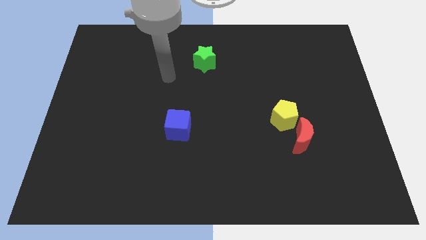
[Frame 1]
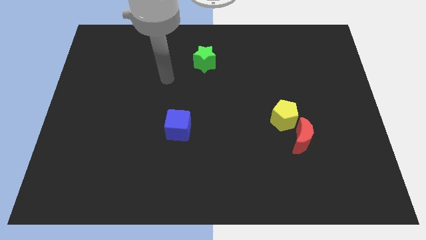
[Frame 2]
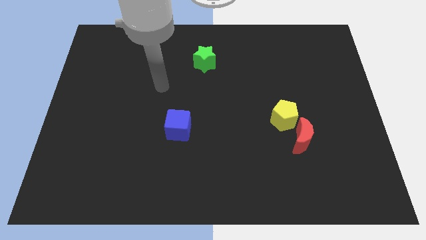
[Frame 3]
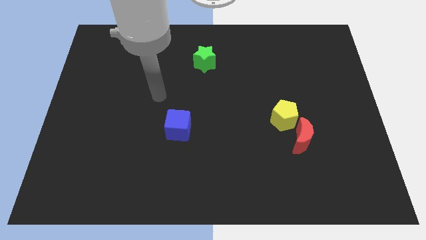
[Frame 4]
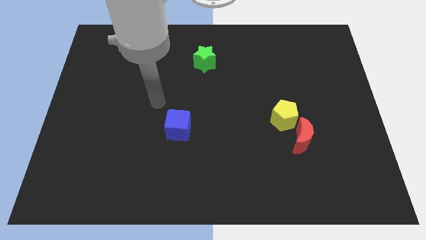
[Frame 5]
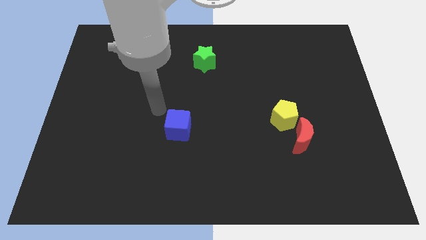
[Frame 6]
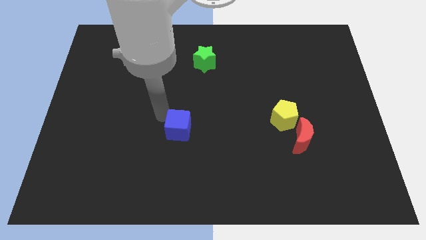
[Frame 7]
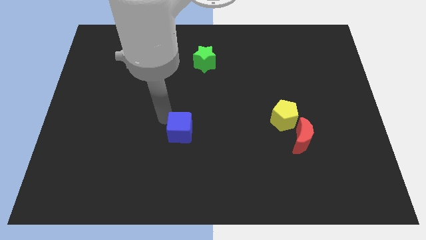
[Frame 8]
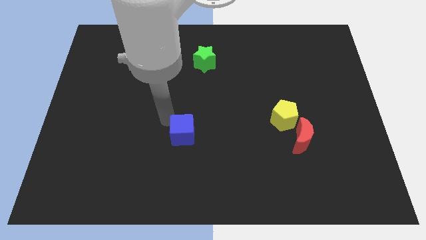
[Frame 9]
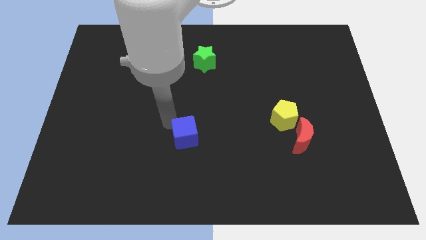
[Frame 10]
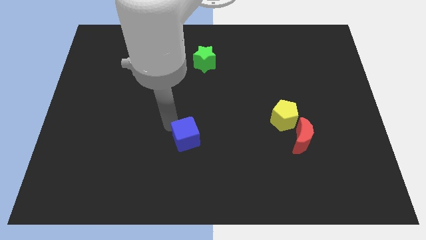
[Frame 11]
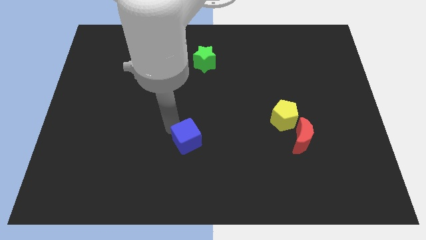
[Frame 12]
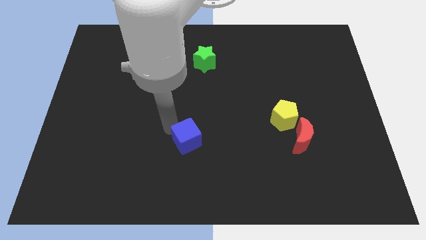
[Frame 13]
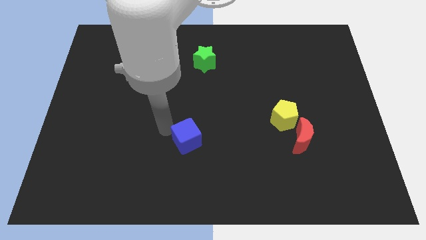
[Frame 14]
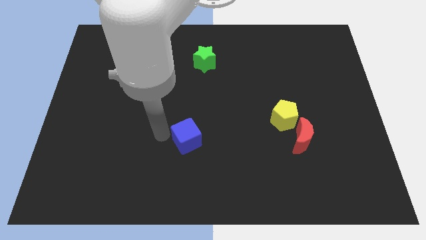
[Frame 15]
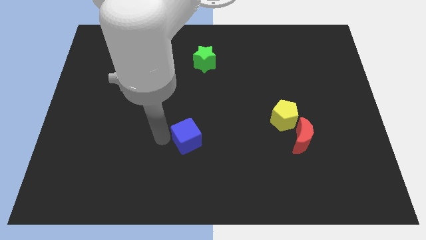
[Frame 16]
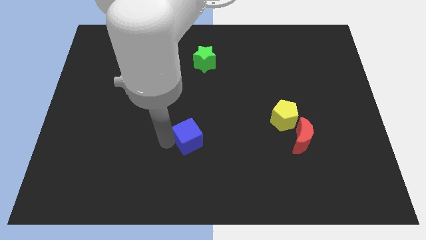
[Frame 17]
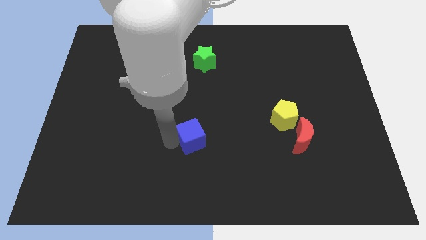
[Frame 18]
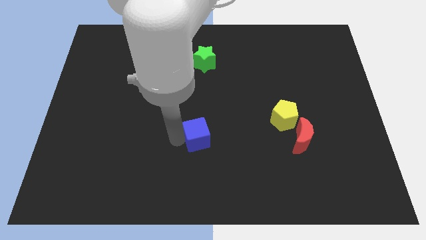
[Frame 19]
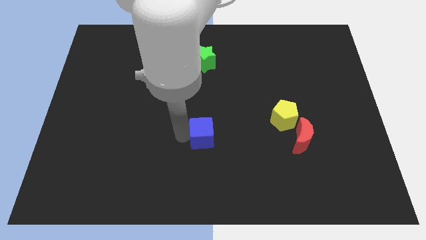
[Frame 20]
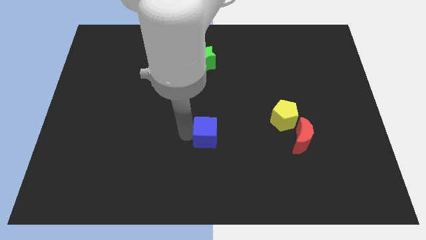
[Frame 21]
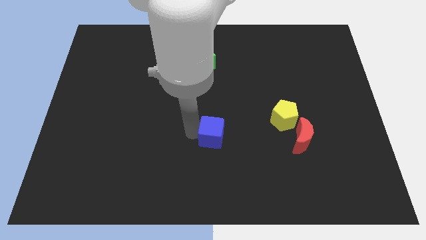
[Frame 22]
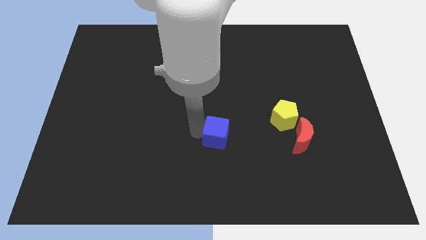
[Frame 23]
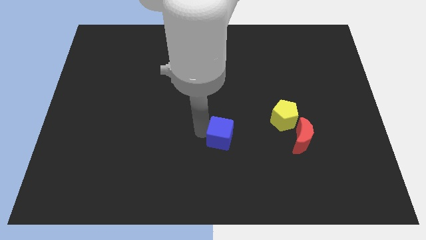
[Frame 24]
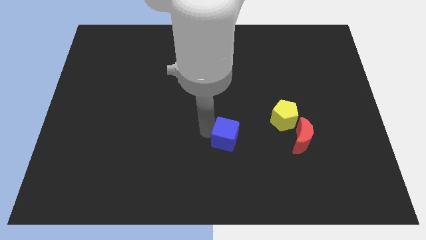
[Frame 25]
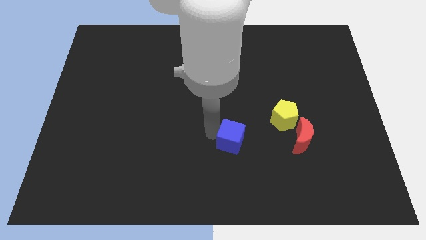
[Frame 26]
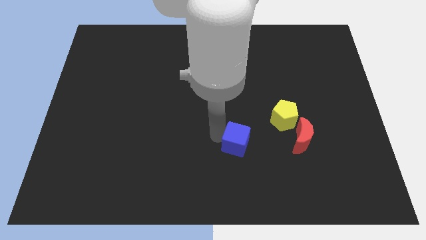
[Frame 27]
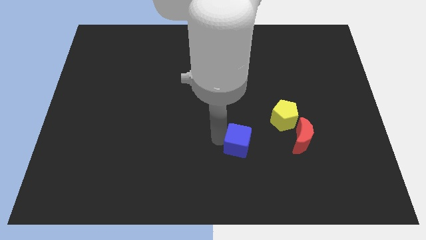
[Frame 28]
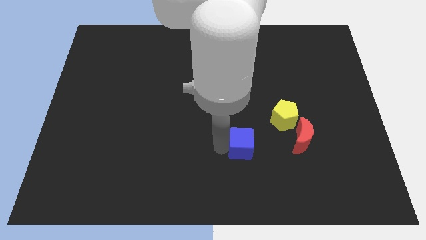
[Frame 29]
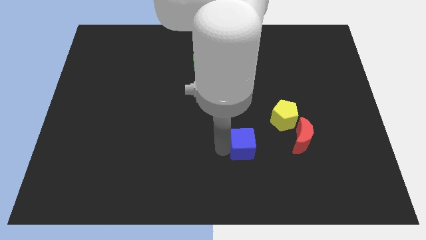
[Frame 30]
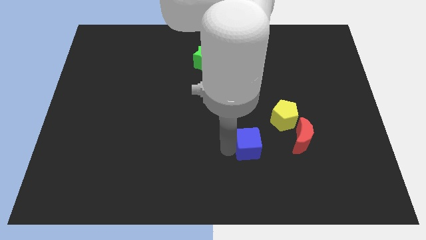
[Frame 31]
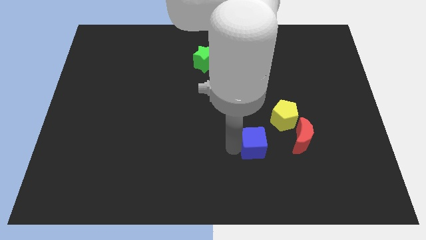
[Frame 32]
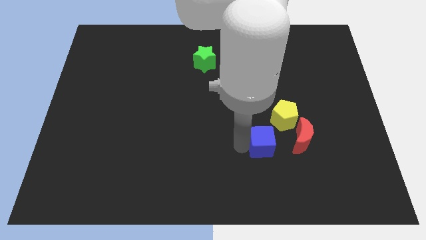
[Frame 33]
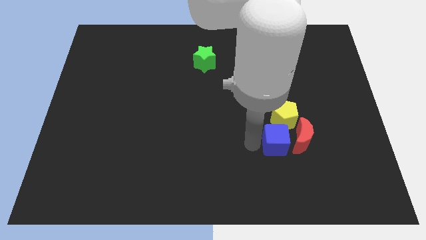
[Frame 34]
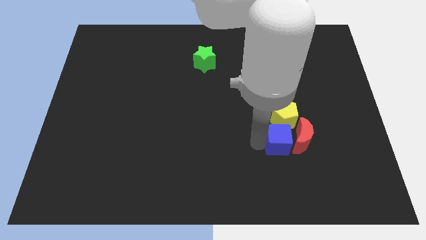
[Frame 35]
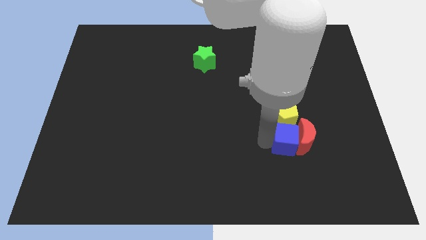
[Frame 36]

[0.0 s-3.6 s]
put the blue block towards the red moon

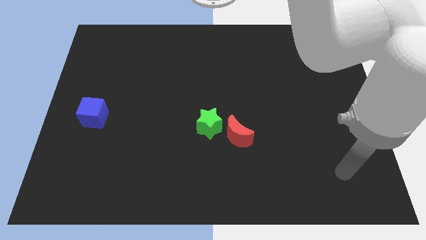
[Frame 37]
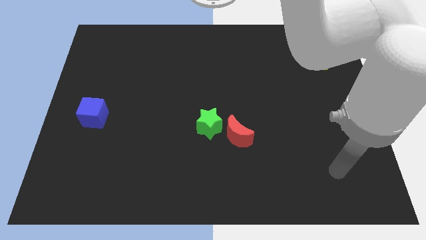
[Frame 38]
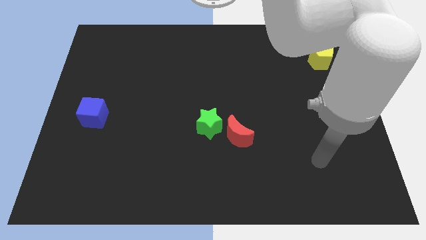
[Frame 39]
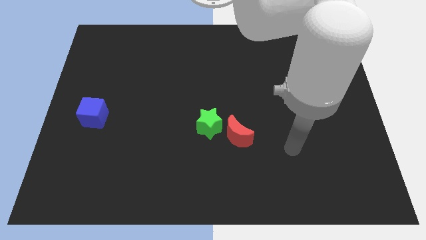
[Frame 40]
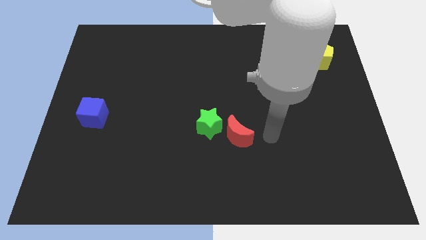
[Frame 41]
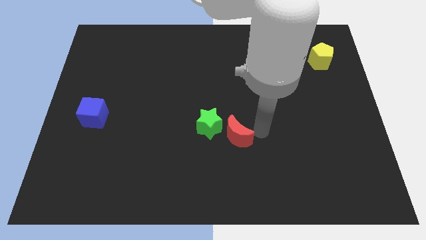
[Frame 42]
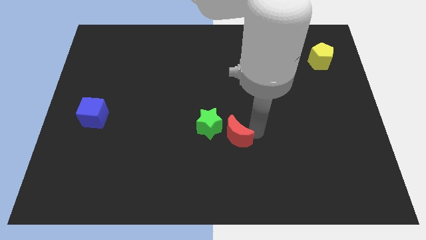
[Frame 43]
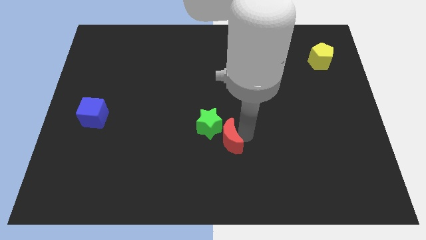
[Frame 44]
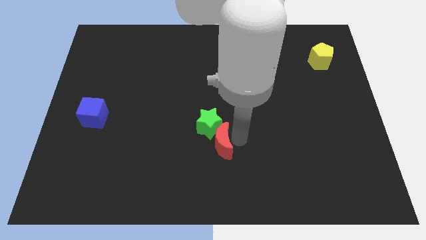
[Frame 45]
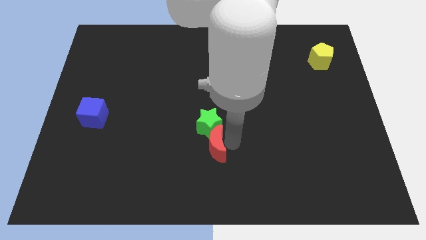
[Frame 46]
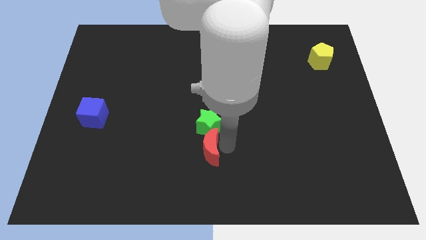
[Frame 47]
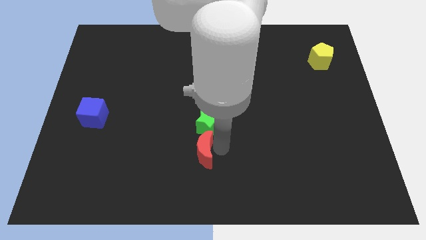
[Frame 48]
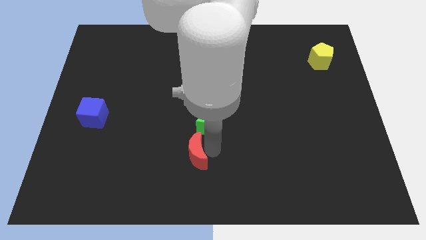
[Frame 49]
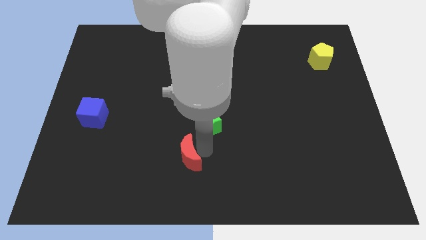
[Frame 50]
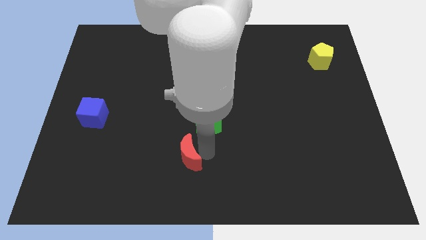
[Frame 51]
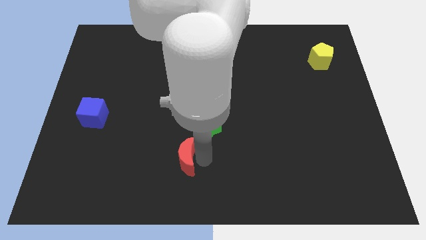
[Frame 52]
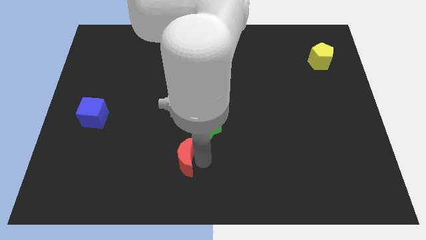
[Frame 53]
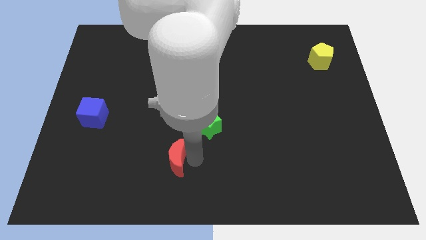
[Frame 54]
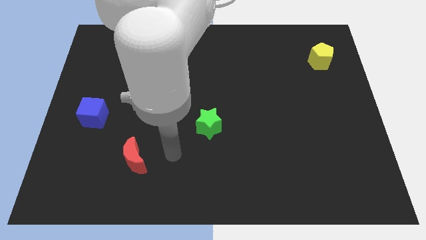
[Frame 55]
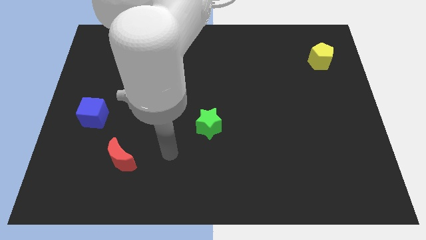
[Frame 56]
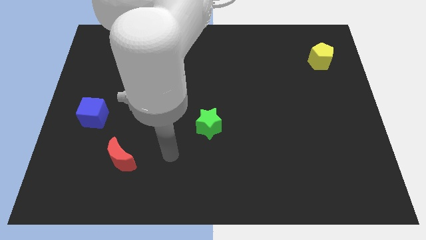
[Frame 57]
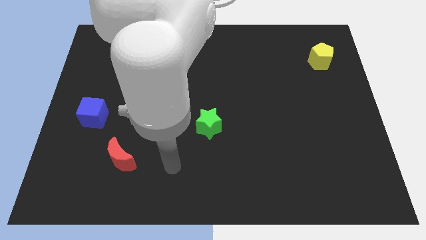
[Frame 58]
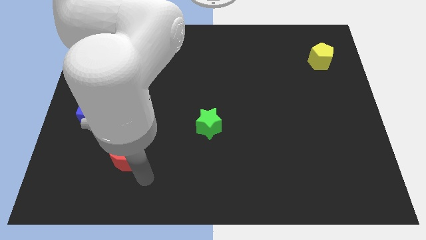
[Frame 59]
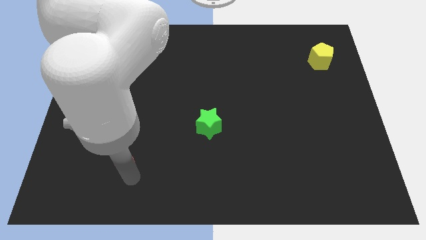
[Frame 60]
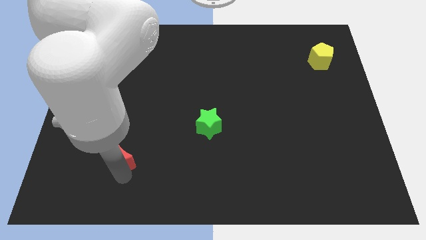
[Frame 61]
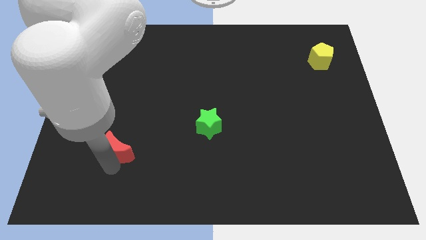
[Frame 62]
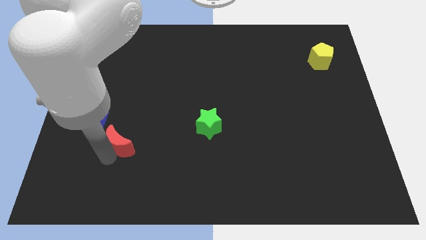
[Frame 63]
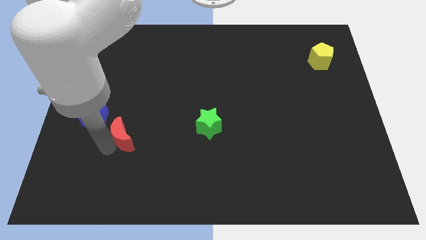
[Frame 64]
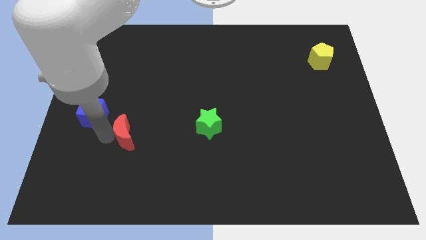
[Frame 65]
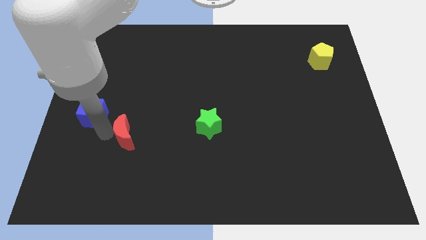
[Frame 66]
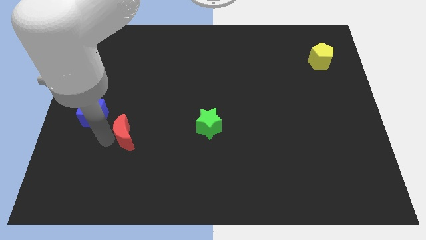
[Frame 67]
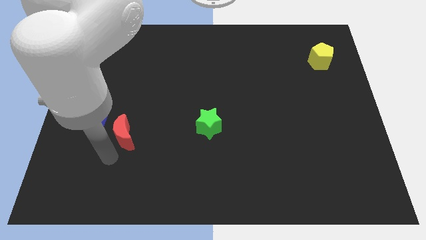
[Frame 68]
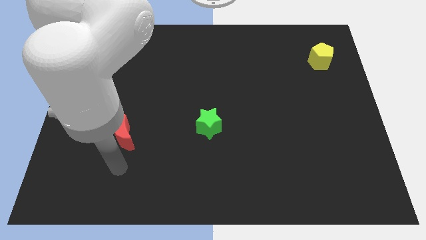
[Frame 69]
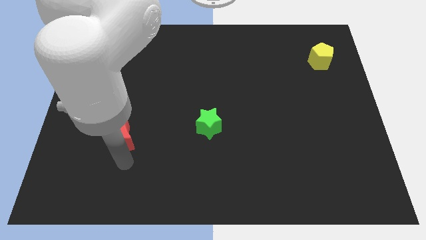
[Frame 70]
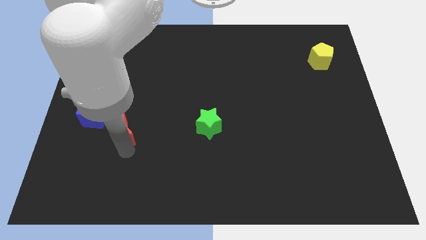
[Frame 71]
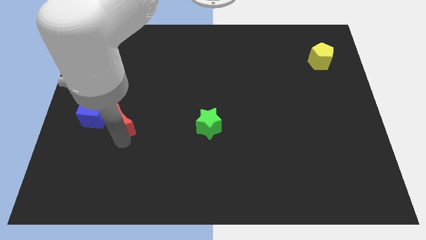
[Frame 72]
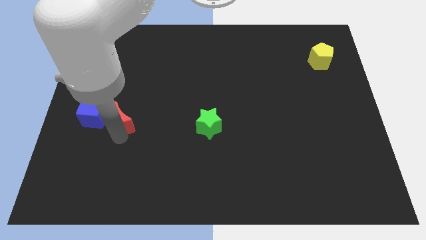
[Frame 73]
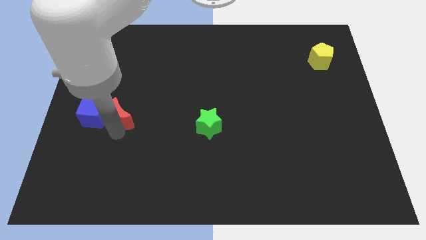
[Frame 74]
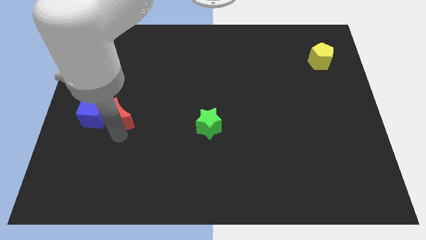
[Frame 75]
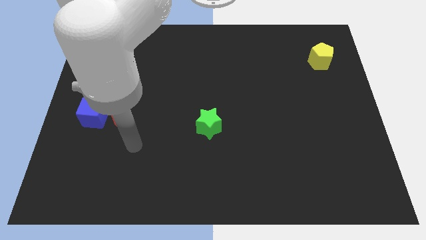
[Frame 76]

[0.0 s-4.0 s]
move the red block to the blue cube

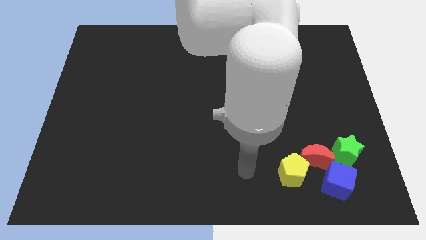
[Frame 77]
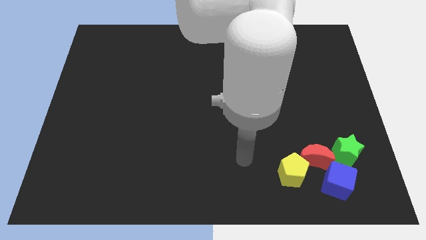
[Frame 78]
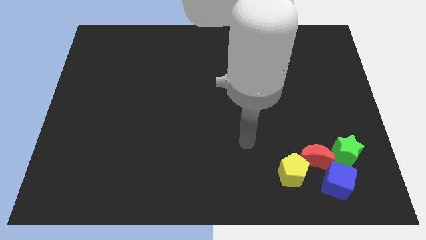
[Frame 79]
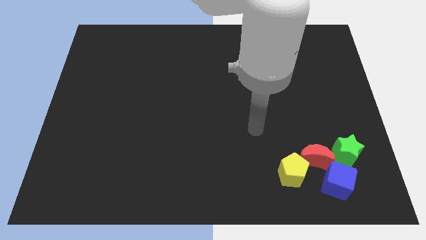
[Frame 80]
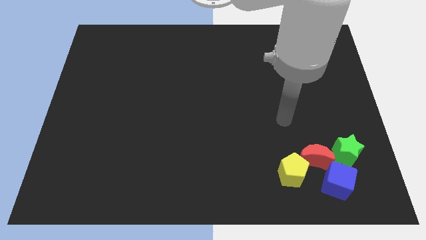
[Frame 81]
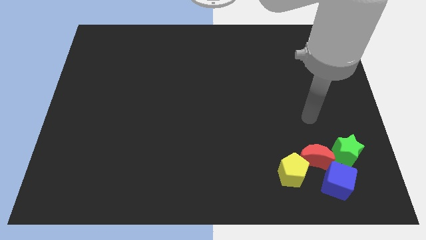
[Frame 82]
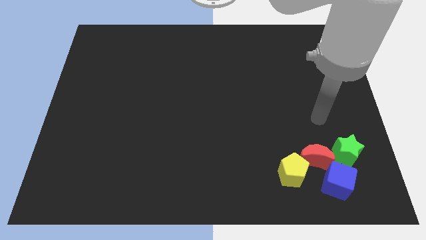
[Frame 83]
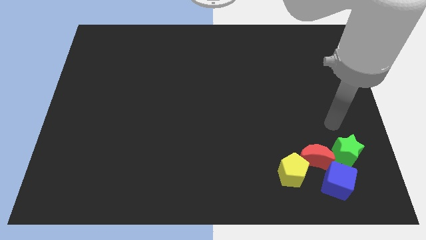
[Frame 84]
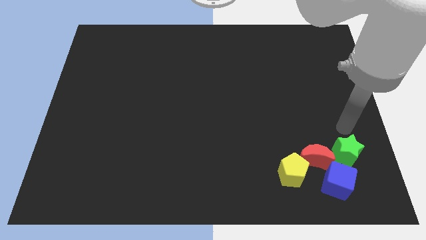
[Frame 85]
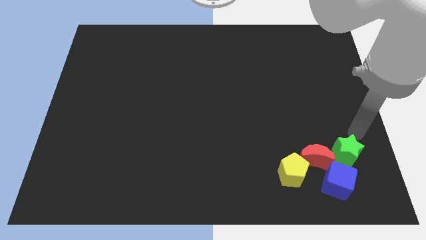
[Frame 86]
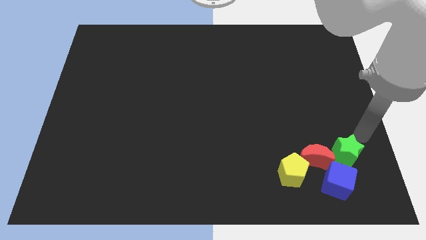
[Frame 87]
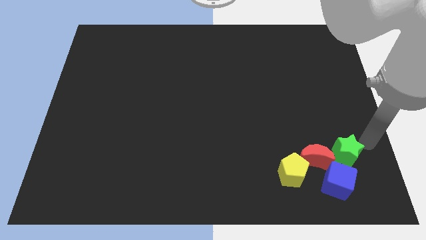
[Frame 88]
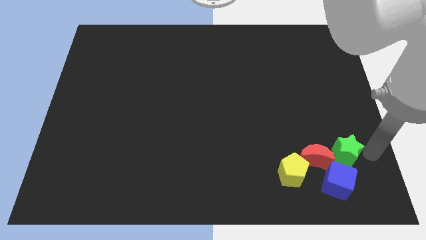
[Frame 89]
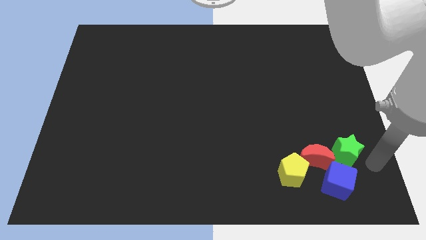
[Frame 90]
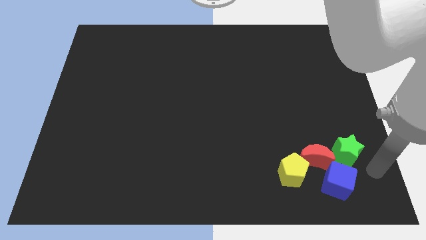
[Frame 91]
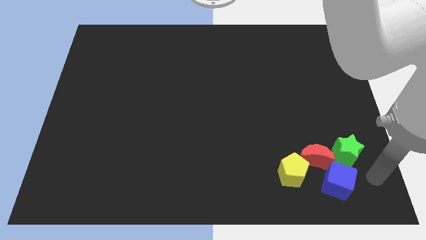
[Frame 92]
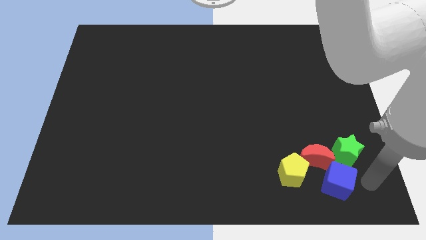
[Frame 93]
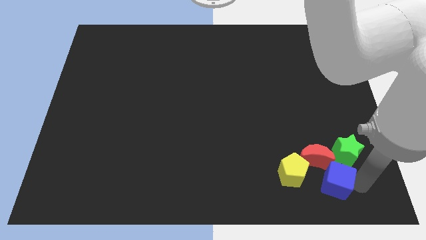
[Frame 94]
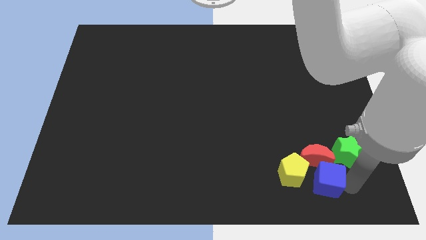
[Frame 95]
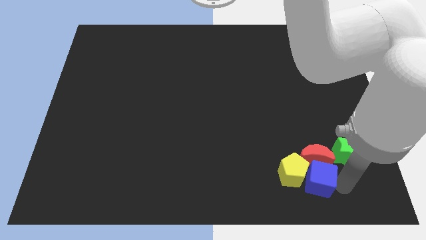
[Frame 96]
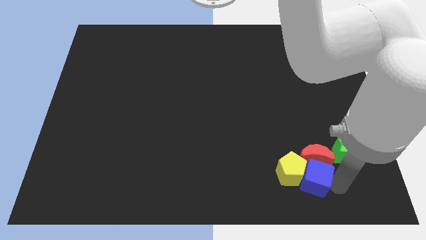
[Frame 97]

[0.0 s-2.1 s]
move the cube to the yellow pentagon
